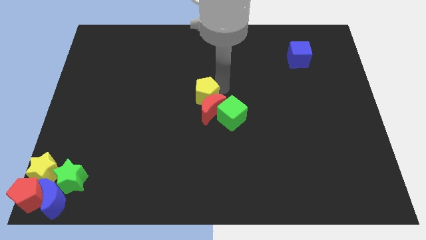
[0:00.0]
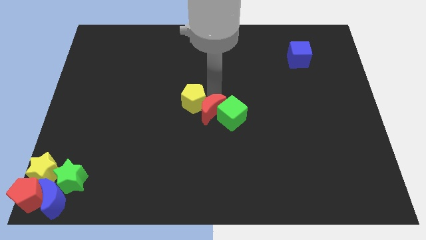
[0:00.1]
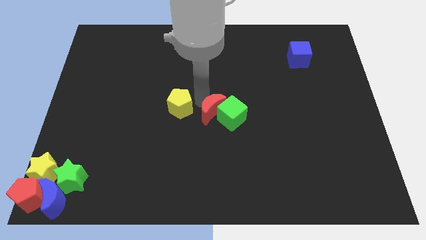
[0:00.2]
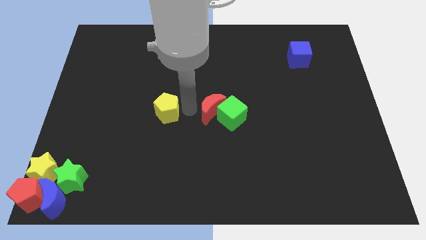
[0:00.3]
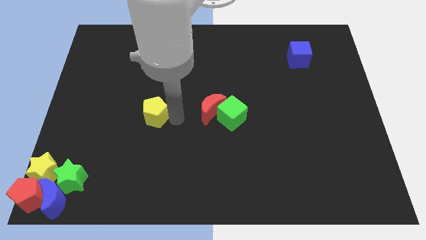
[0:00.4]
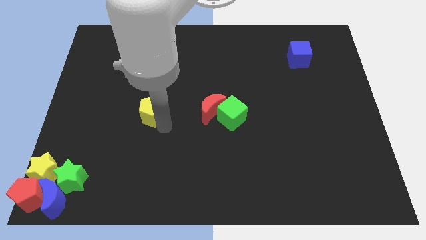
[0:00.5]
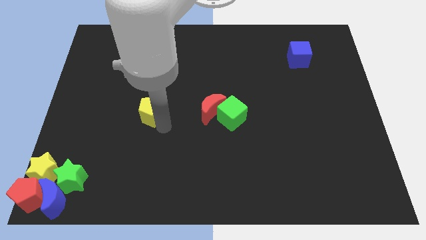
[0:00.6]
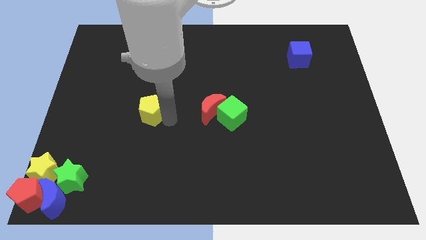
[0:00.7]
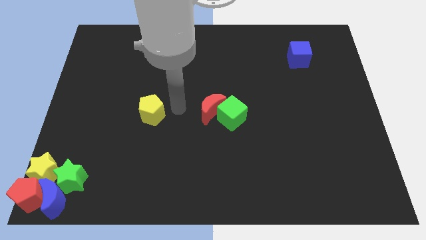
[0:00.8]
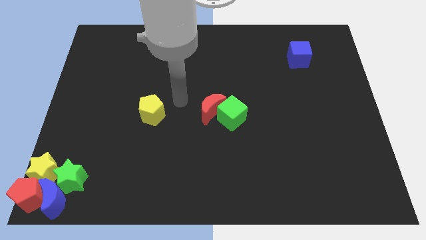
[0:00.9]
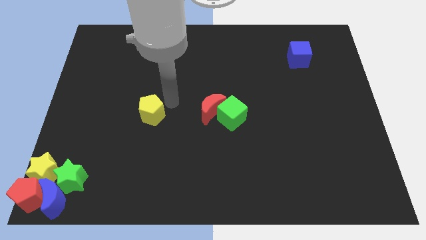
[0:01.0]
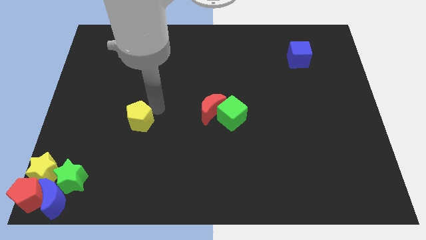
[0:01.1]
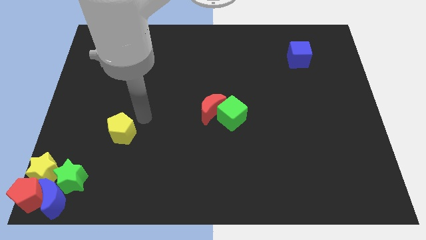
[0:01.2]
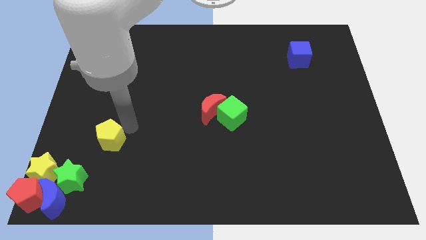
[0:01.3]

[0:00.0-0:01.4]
separate yellow pentagon from red moon

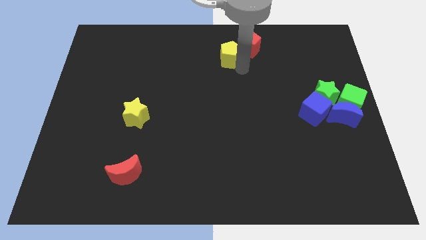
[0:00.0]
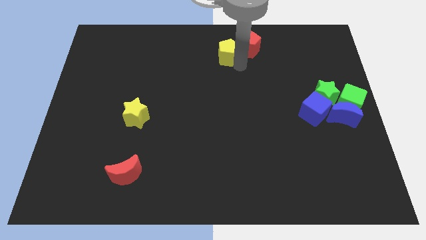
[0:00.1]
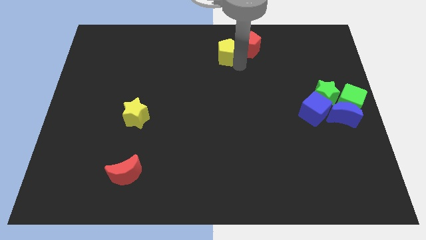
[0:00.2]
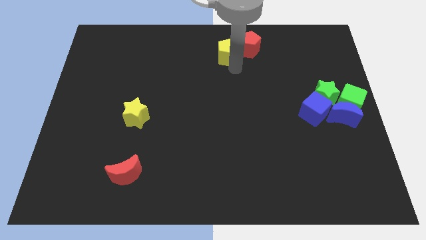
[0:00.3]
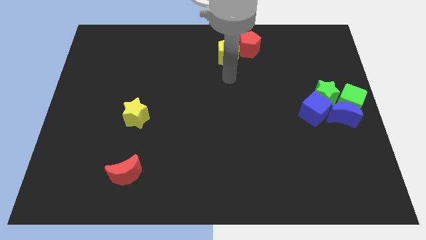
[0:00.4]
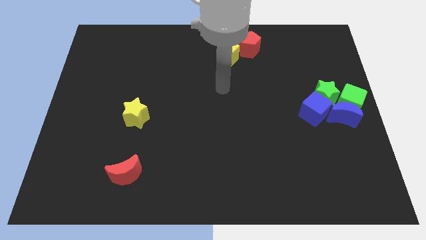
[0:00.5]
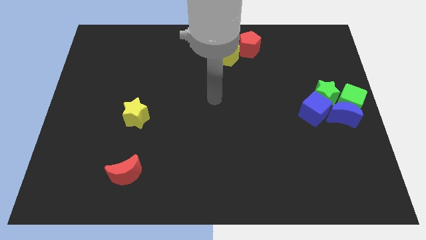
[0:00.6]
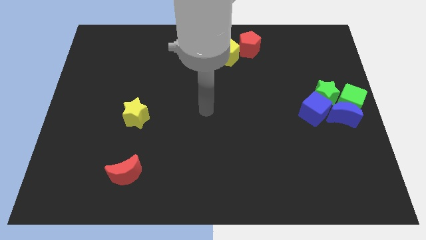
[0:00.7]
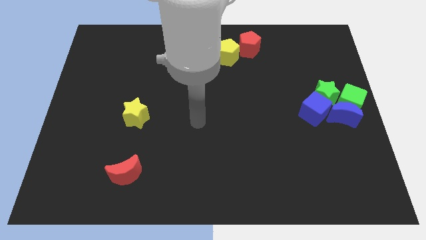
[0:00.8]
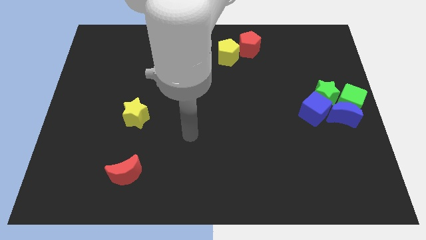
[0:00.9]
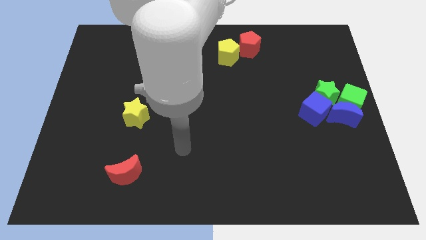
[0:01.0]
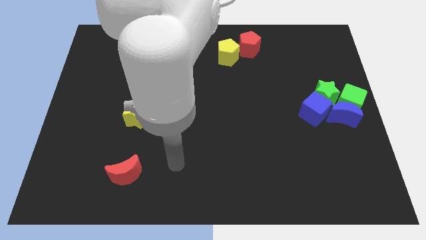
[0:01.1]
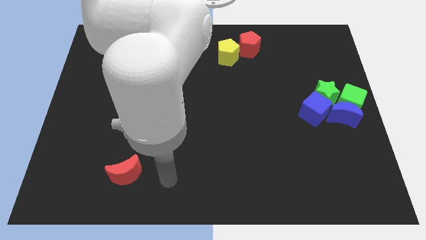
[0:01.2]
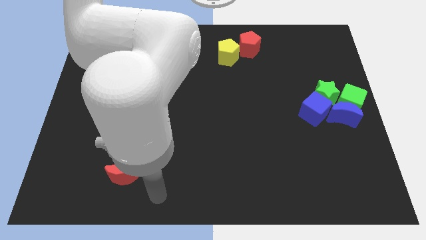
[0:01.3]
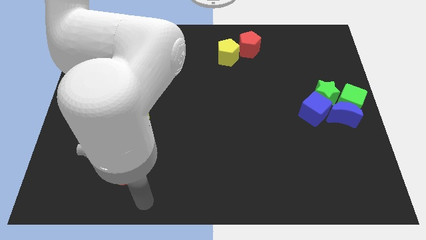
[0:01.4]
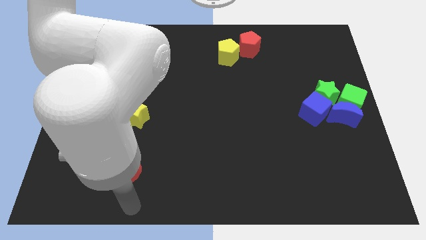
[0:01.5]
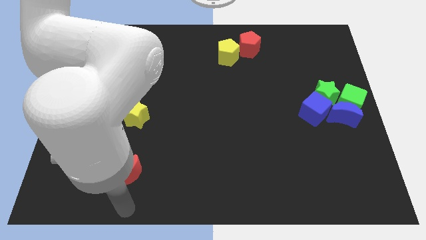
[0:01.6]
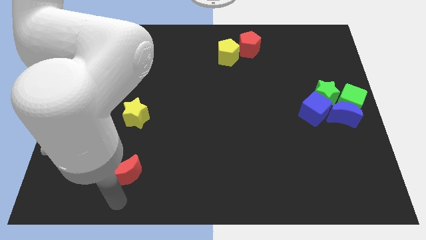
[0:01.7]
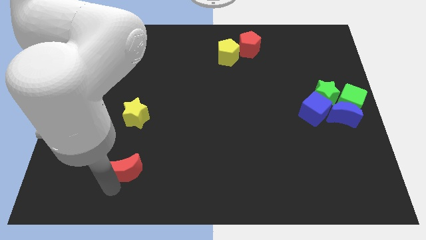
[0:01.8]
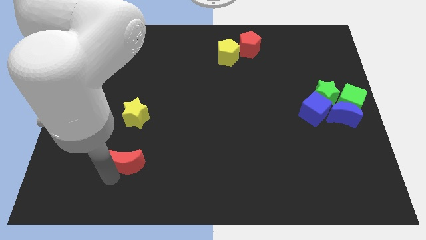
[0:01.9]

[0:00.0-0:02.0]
slightly push the red crescent upwards

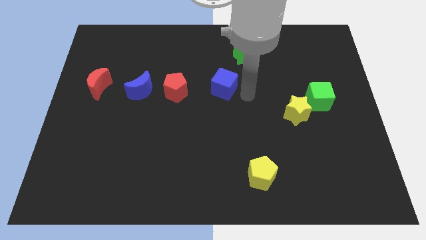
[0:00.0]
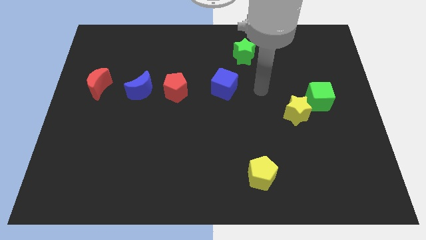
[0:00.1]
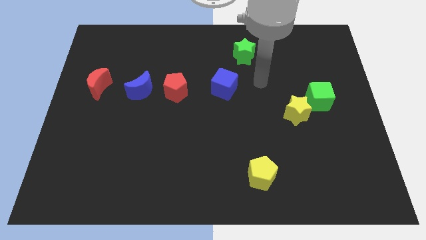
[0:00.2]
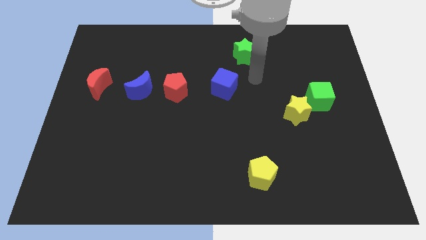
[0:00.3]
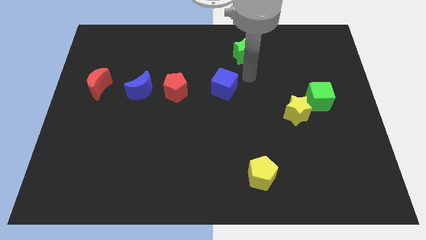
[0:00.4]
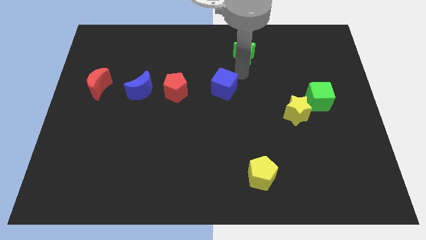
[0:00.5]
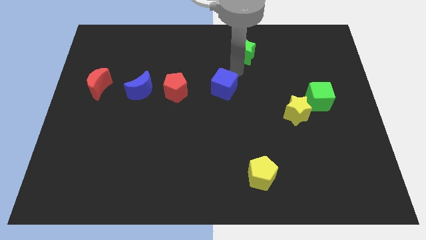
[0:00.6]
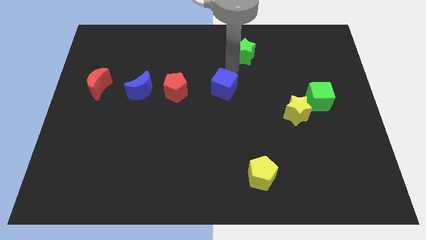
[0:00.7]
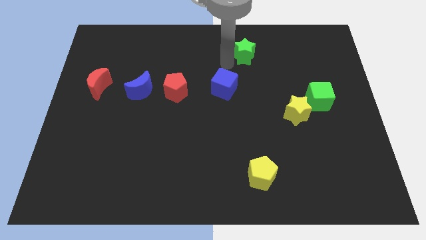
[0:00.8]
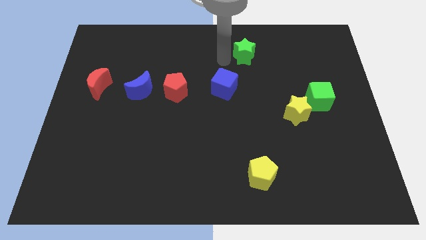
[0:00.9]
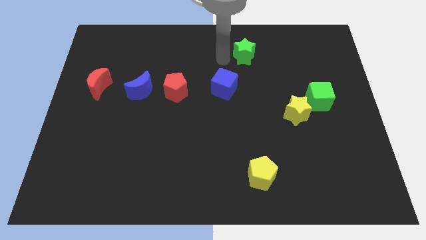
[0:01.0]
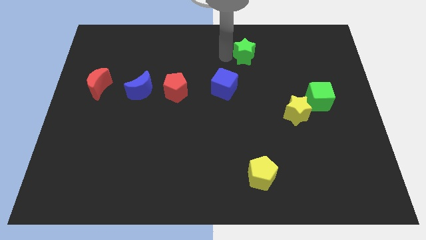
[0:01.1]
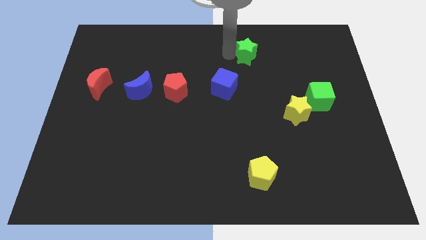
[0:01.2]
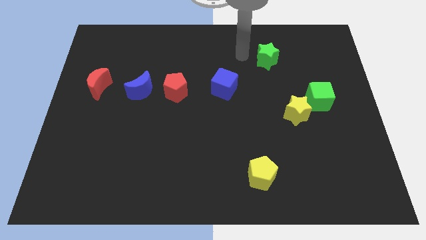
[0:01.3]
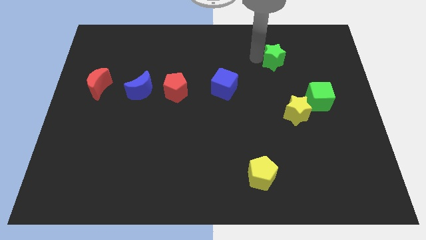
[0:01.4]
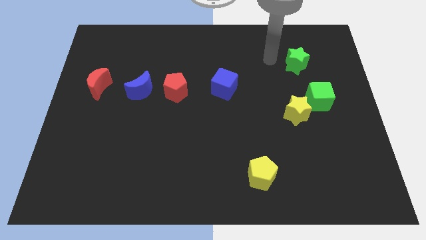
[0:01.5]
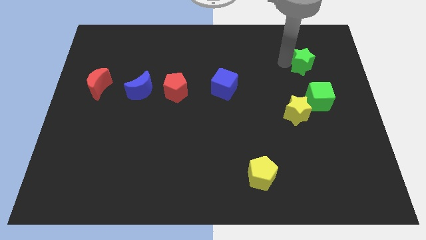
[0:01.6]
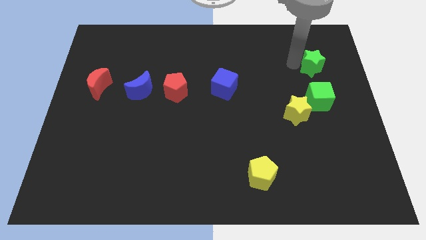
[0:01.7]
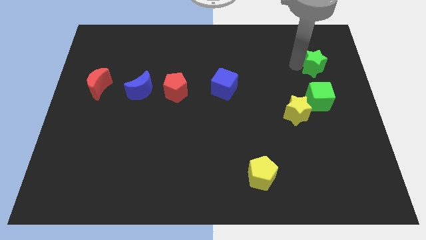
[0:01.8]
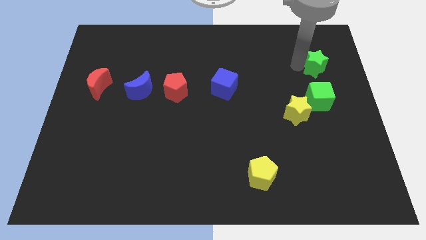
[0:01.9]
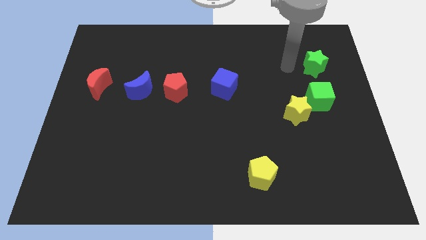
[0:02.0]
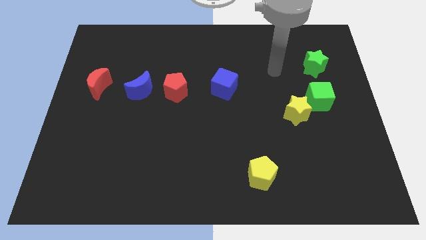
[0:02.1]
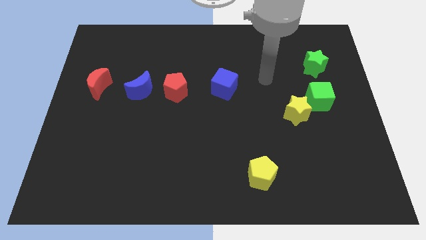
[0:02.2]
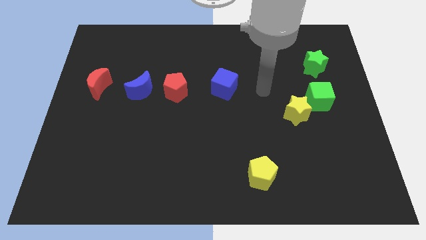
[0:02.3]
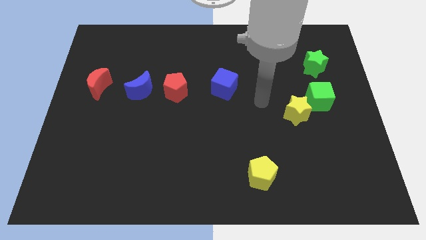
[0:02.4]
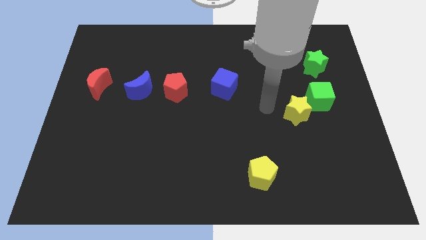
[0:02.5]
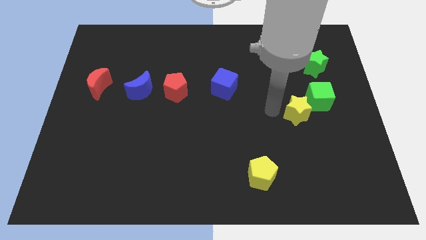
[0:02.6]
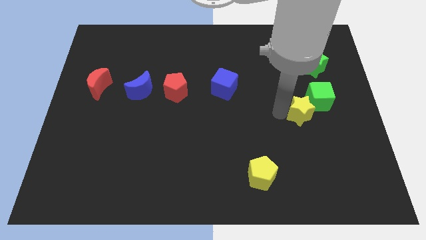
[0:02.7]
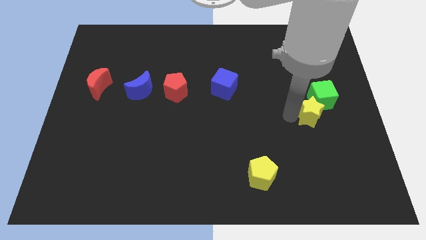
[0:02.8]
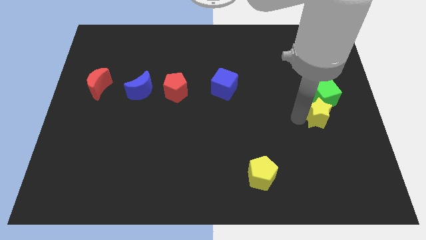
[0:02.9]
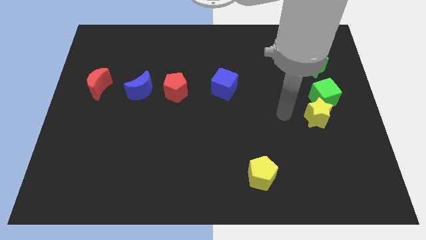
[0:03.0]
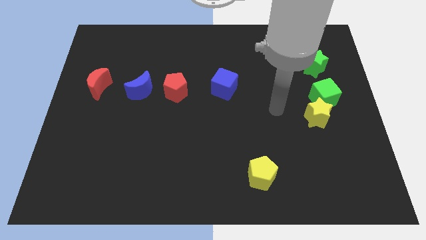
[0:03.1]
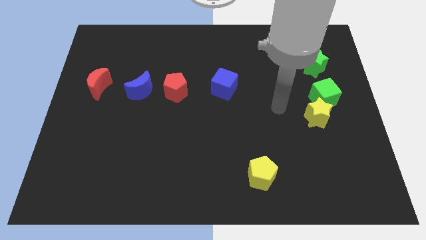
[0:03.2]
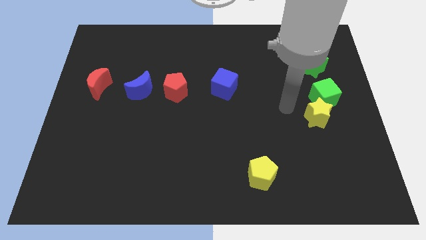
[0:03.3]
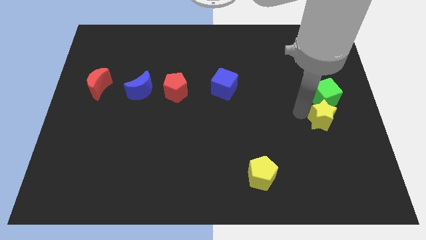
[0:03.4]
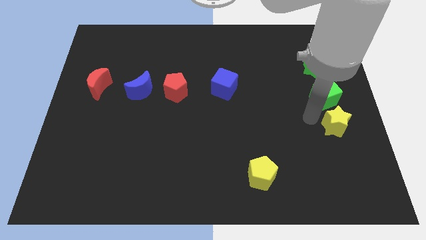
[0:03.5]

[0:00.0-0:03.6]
place the yellow star and green blocks in a vertical line

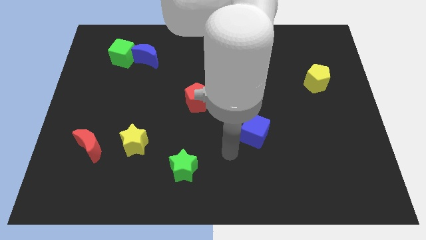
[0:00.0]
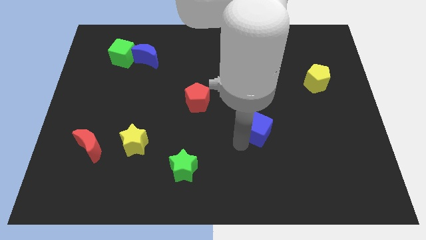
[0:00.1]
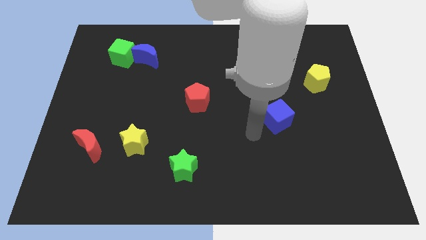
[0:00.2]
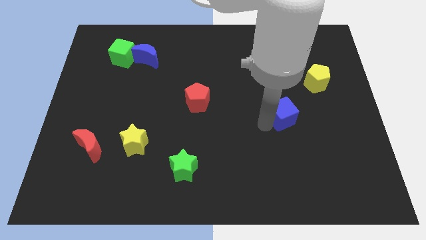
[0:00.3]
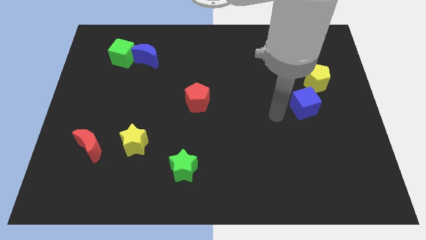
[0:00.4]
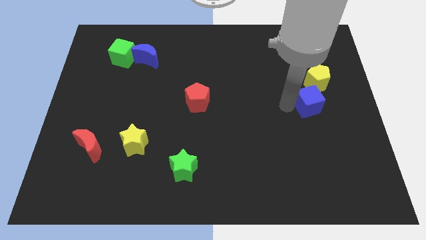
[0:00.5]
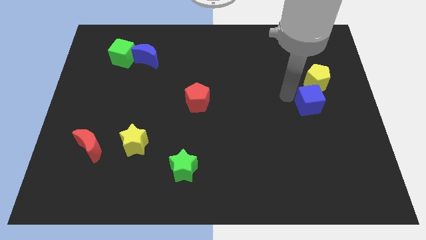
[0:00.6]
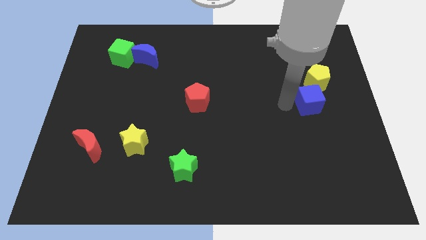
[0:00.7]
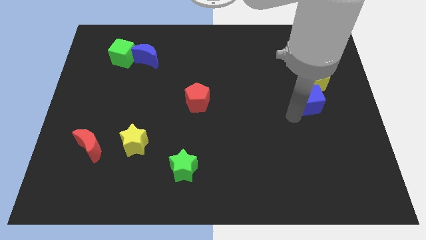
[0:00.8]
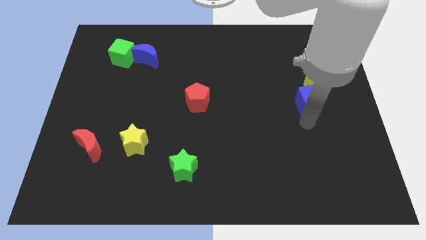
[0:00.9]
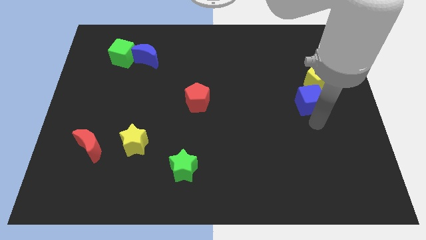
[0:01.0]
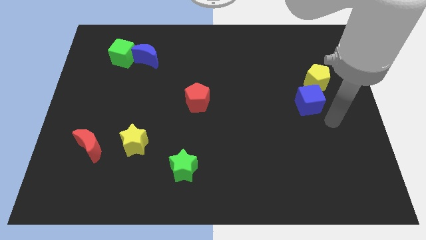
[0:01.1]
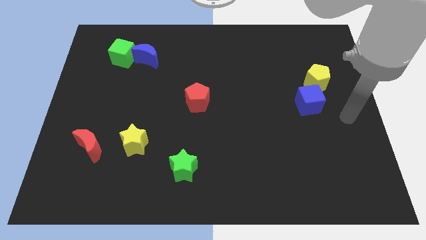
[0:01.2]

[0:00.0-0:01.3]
place the blue cube to the bottom left side of the yellow pentagon

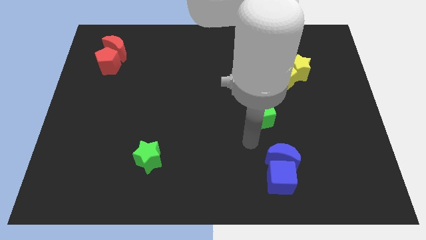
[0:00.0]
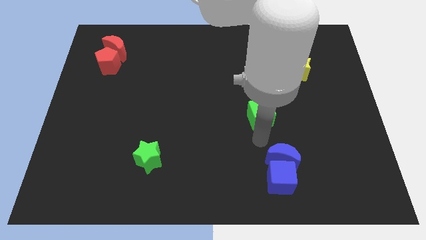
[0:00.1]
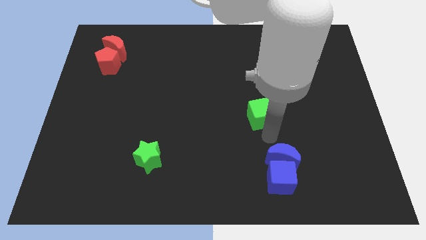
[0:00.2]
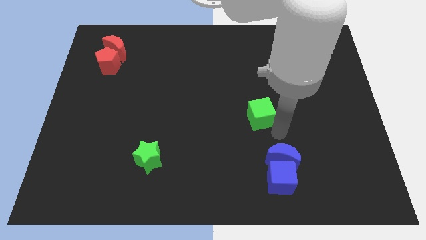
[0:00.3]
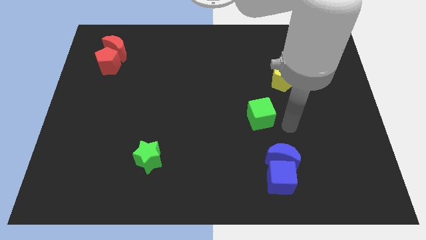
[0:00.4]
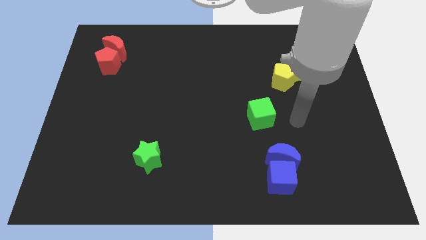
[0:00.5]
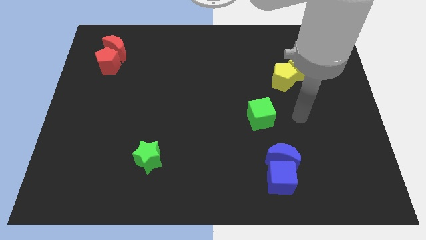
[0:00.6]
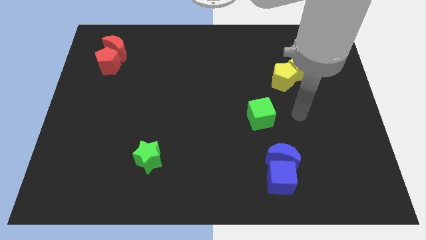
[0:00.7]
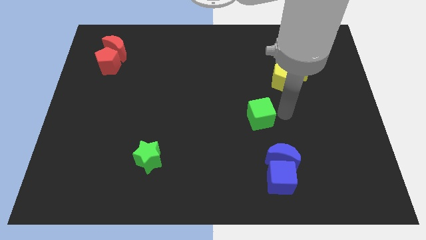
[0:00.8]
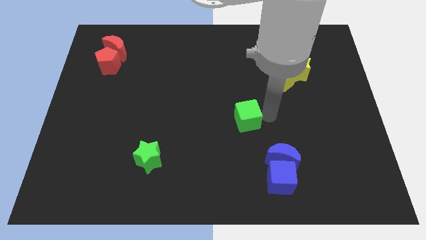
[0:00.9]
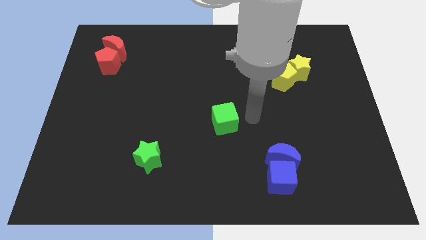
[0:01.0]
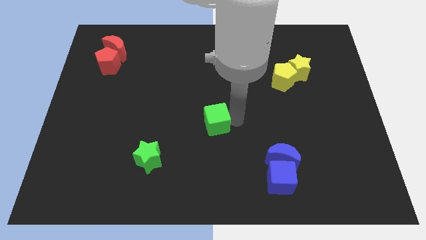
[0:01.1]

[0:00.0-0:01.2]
place the green cube at the center of the board
